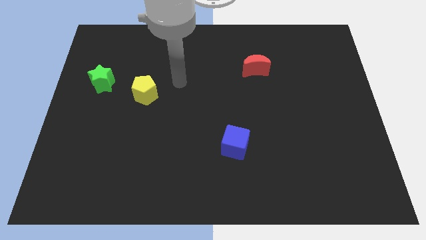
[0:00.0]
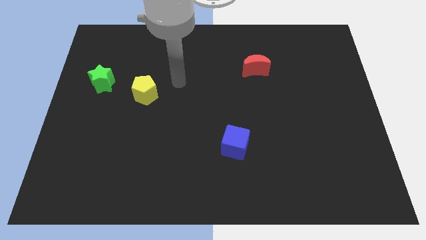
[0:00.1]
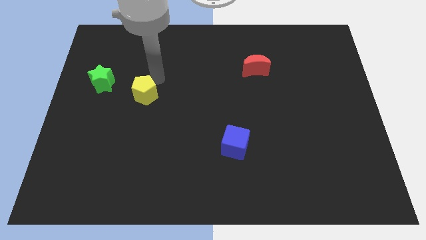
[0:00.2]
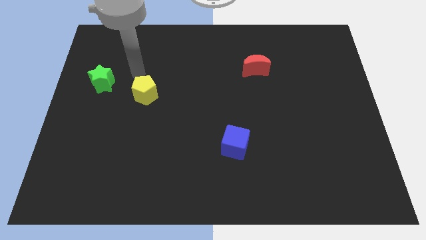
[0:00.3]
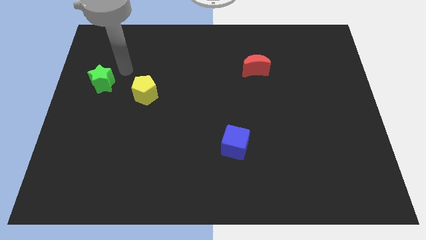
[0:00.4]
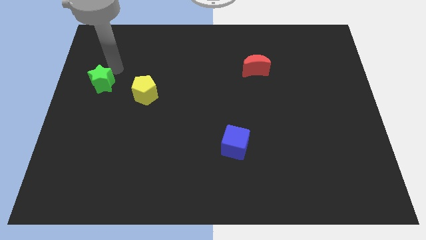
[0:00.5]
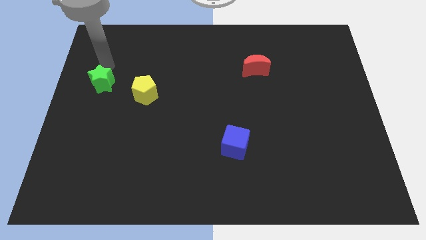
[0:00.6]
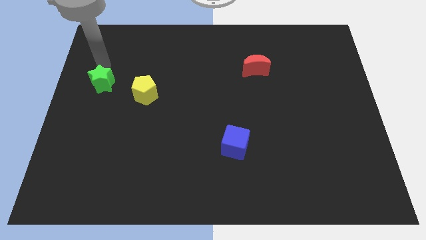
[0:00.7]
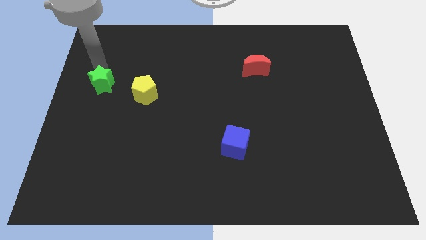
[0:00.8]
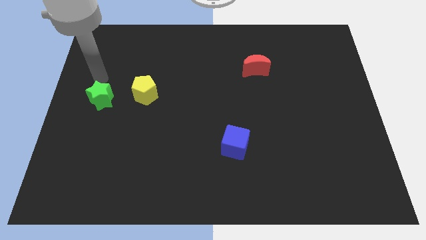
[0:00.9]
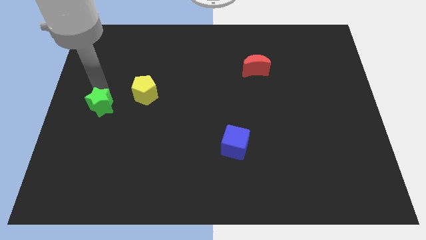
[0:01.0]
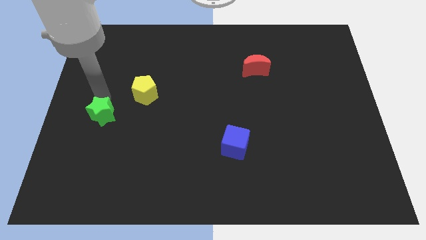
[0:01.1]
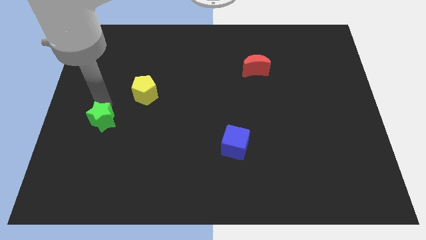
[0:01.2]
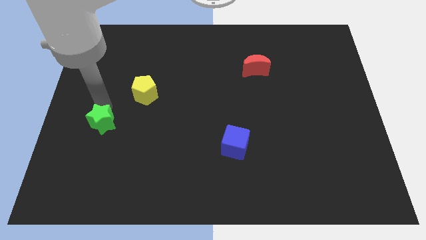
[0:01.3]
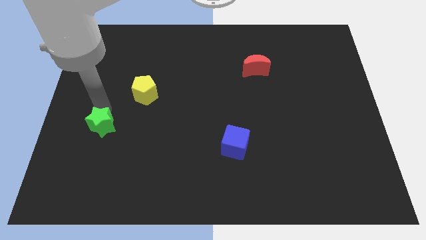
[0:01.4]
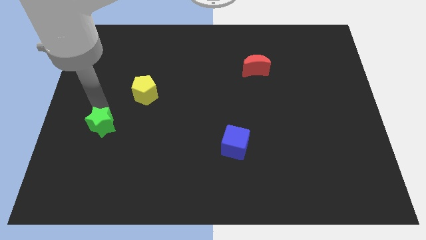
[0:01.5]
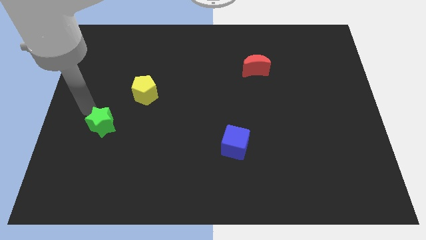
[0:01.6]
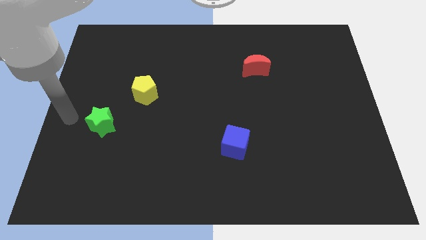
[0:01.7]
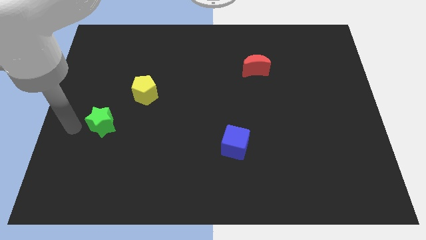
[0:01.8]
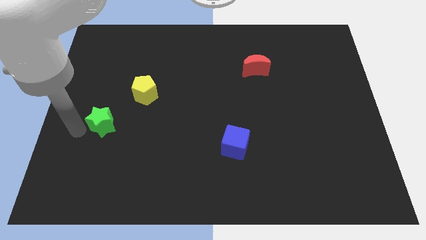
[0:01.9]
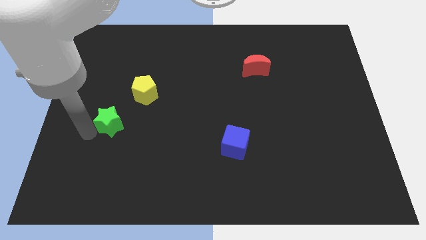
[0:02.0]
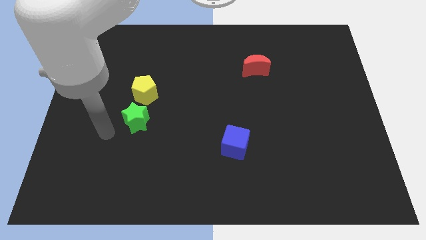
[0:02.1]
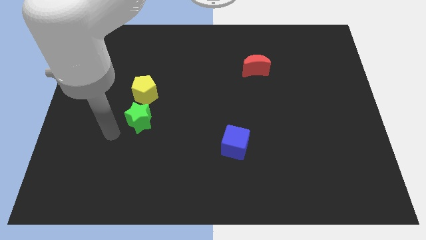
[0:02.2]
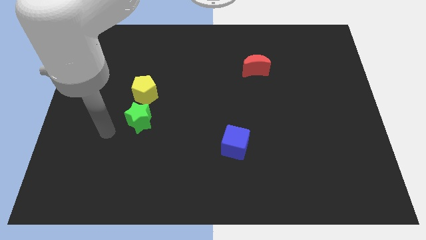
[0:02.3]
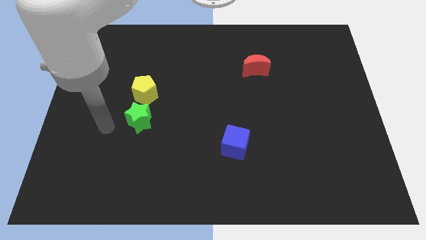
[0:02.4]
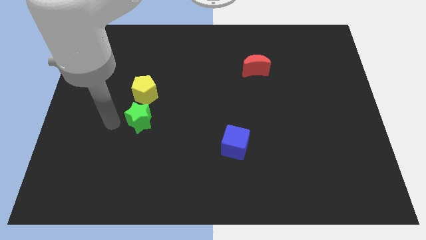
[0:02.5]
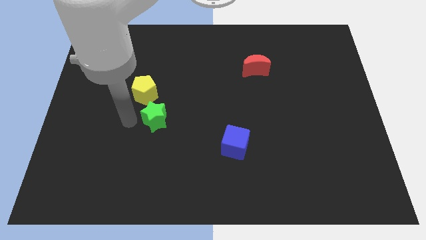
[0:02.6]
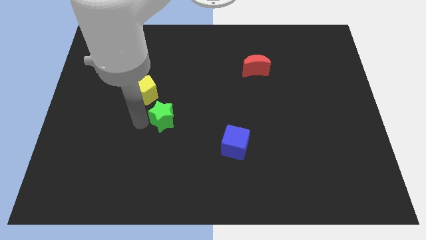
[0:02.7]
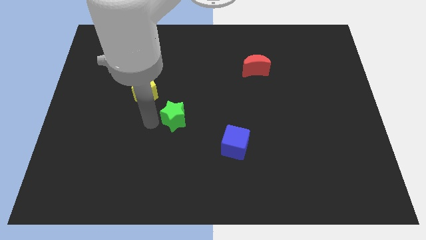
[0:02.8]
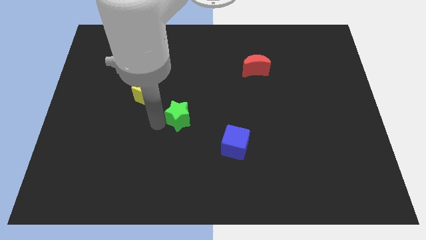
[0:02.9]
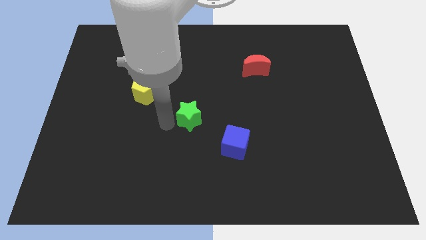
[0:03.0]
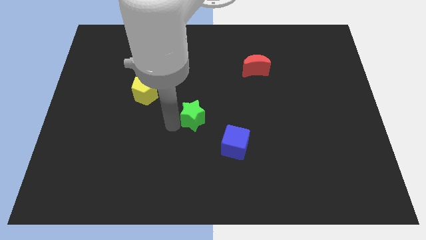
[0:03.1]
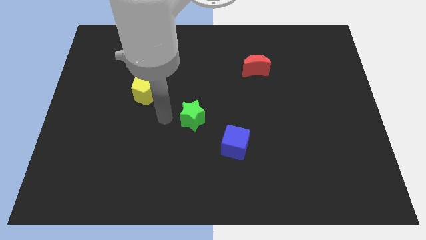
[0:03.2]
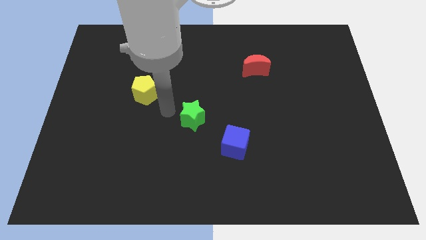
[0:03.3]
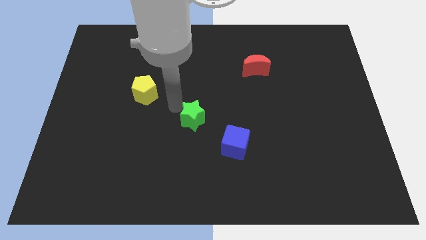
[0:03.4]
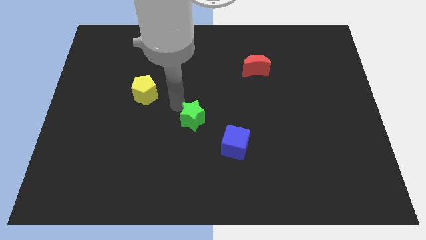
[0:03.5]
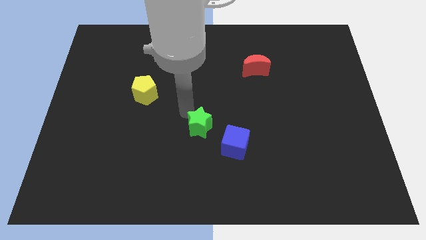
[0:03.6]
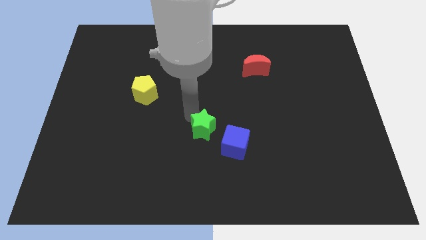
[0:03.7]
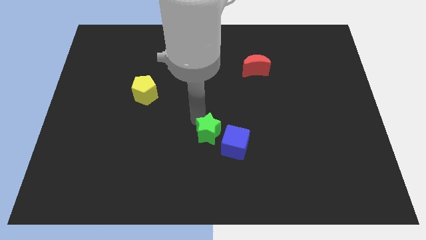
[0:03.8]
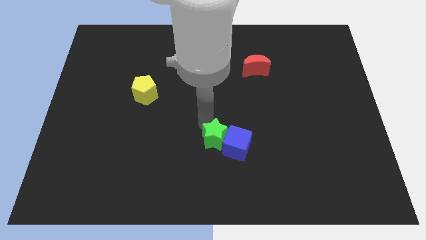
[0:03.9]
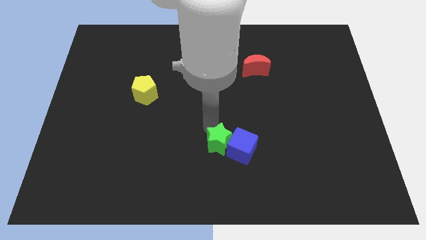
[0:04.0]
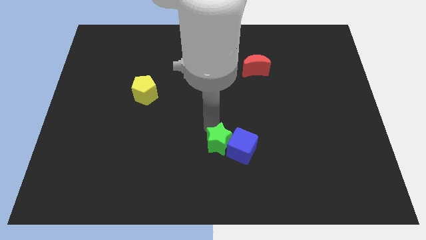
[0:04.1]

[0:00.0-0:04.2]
put the star next to the blue block

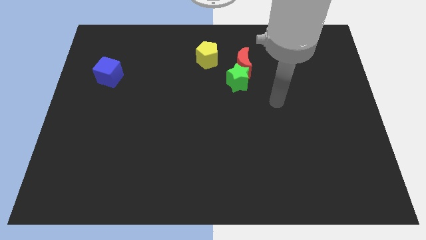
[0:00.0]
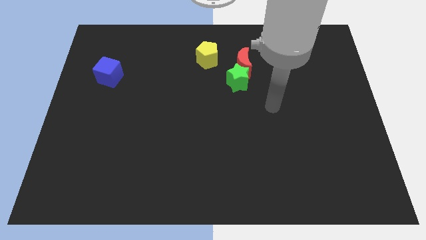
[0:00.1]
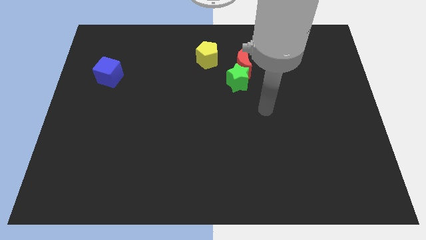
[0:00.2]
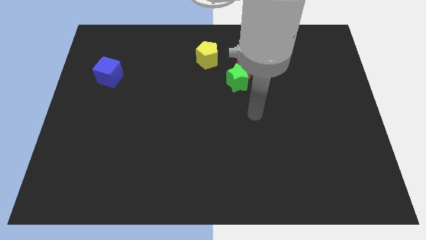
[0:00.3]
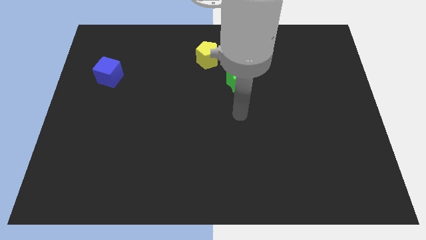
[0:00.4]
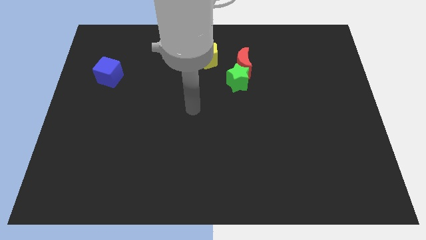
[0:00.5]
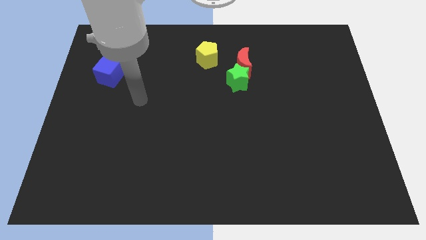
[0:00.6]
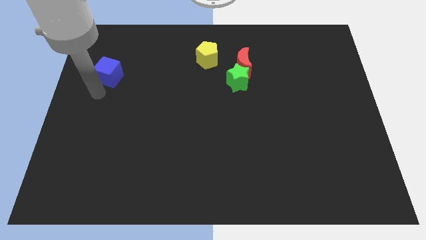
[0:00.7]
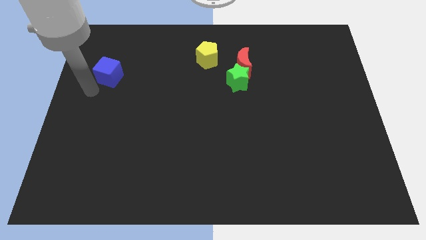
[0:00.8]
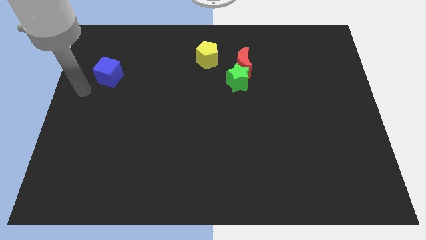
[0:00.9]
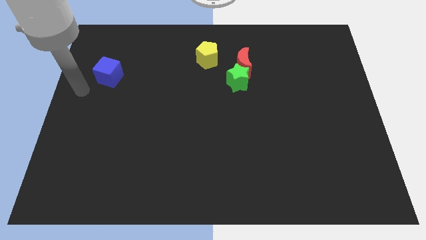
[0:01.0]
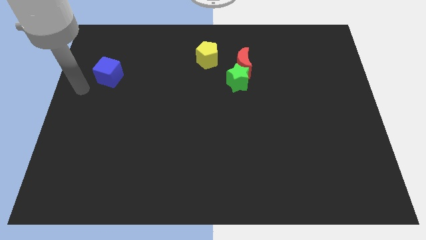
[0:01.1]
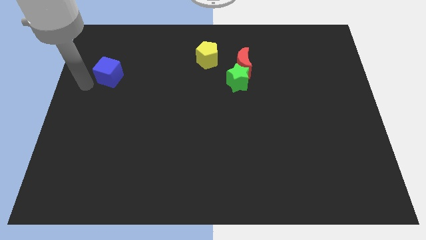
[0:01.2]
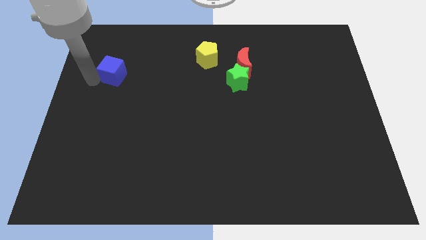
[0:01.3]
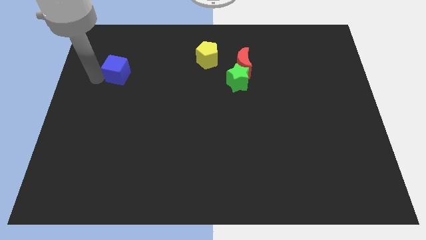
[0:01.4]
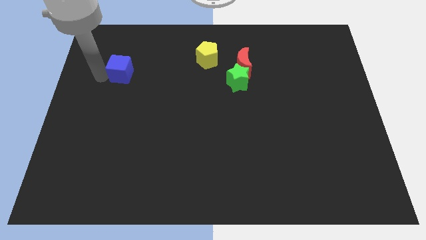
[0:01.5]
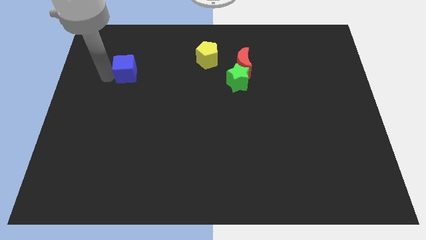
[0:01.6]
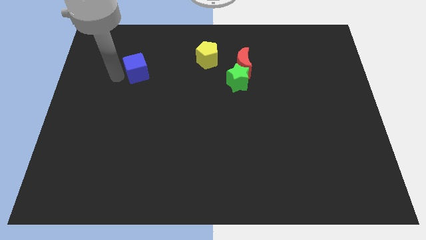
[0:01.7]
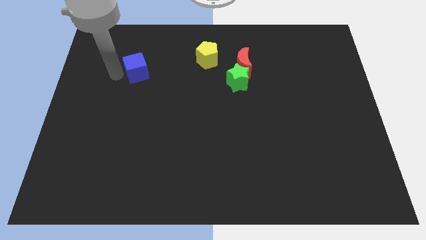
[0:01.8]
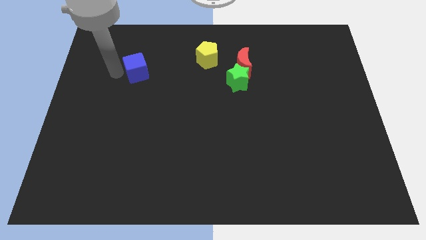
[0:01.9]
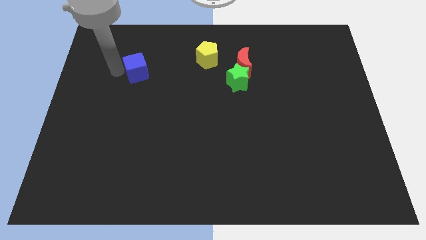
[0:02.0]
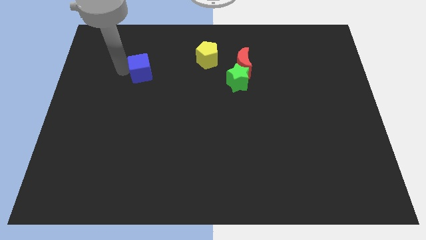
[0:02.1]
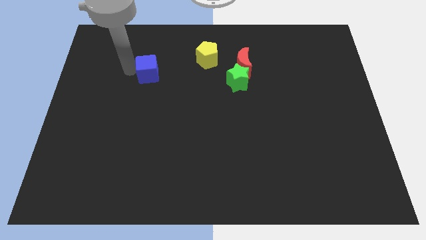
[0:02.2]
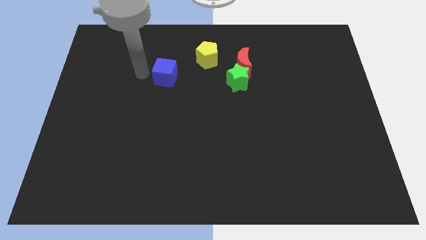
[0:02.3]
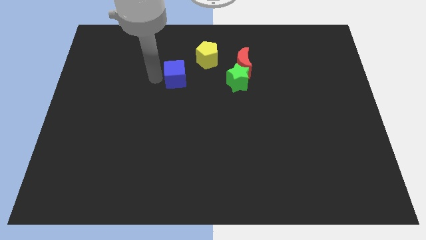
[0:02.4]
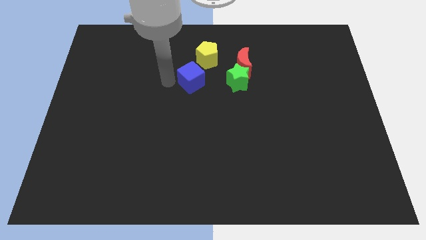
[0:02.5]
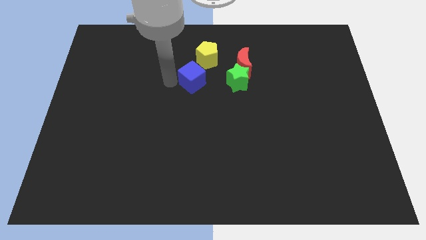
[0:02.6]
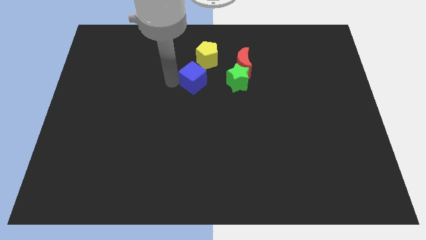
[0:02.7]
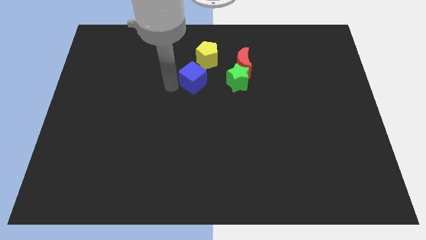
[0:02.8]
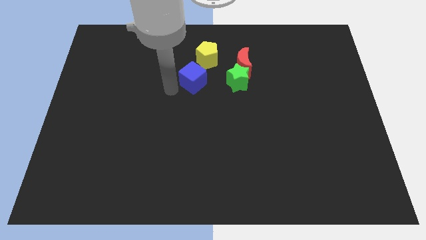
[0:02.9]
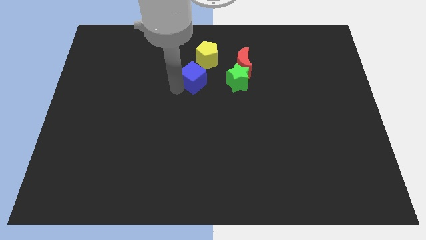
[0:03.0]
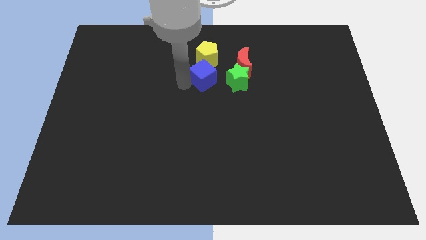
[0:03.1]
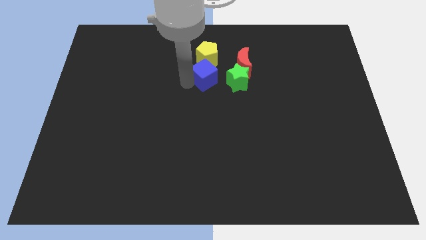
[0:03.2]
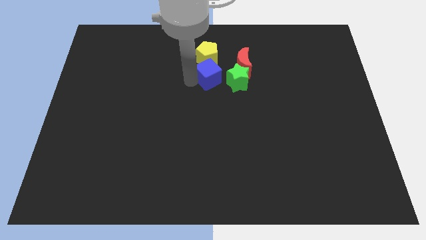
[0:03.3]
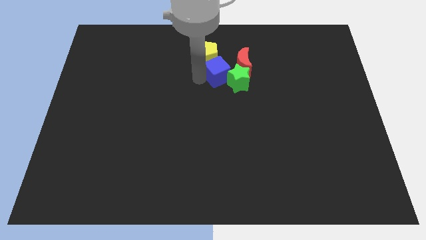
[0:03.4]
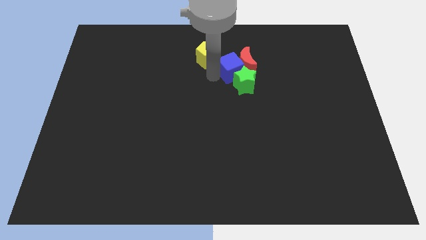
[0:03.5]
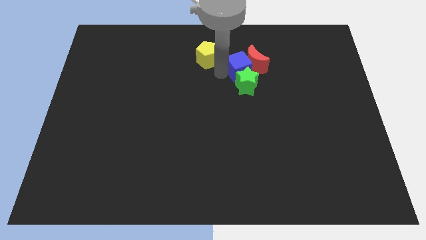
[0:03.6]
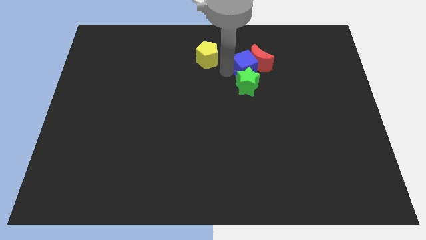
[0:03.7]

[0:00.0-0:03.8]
move the cube next to the red block

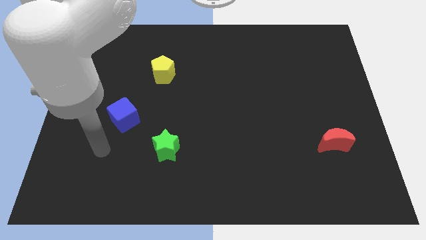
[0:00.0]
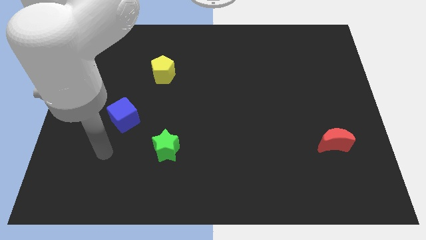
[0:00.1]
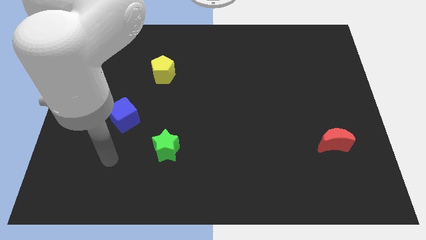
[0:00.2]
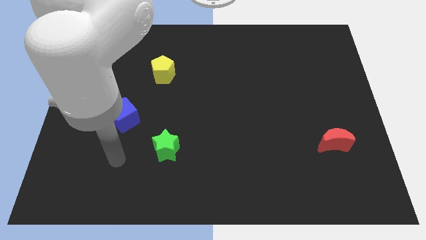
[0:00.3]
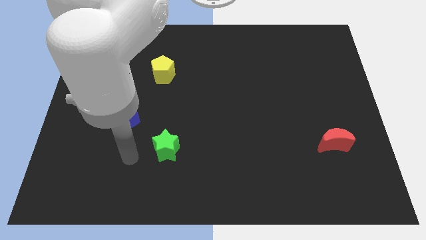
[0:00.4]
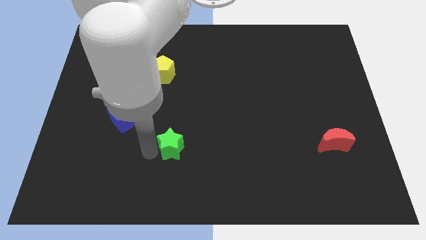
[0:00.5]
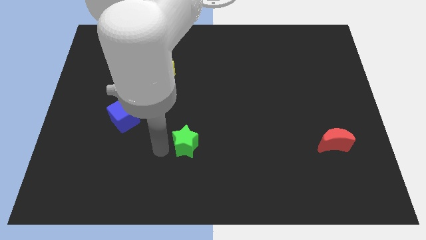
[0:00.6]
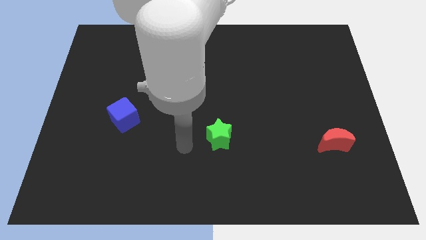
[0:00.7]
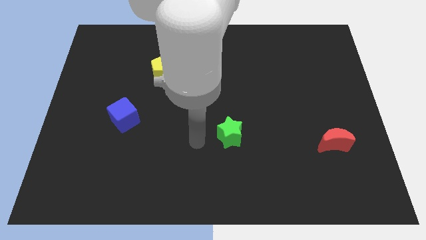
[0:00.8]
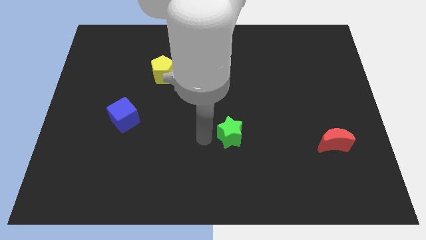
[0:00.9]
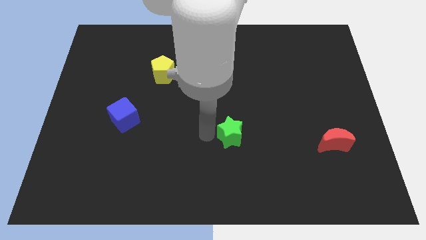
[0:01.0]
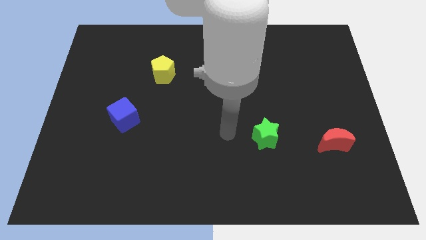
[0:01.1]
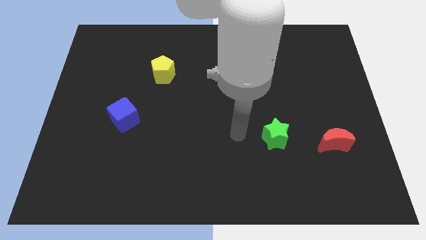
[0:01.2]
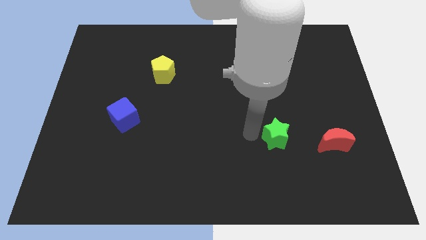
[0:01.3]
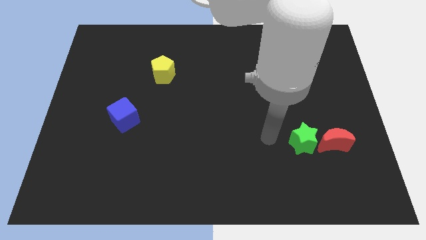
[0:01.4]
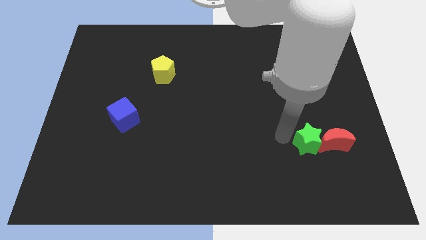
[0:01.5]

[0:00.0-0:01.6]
push the star close to the red moon
